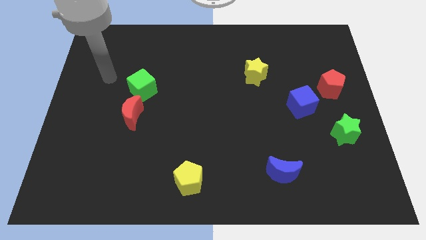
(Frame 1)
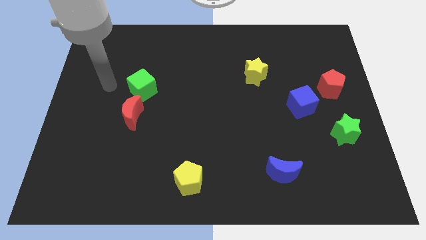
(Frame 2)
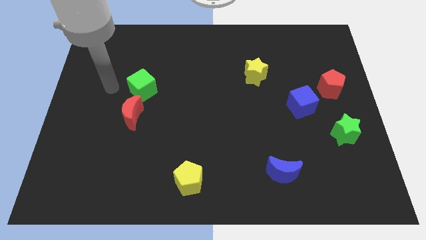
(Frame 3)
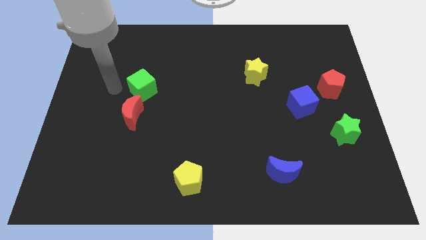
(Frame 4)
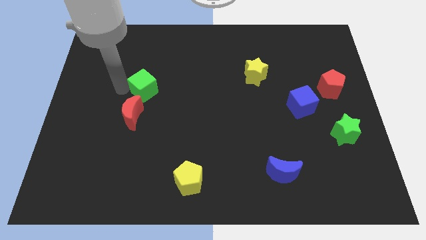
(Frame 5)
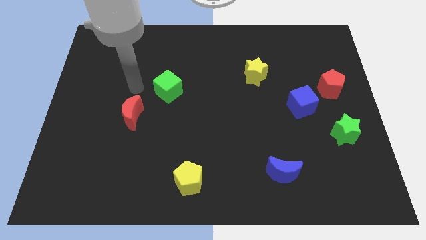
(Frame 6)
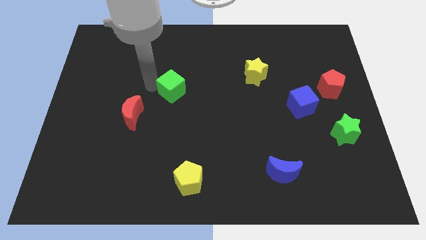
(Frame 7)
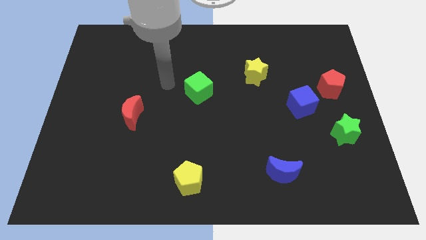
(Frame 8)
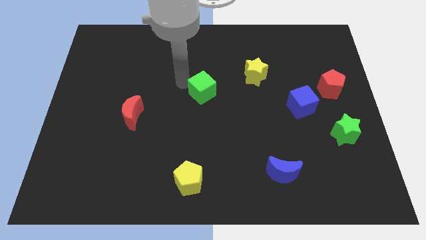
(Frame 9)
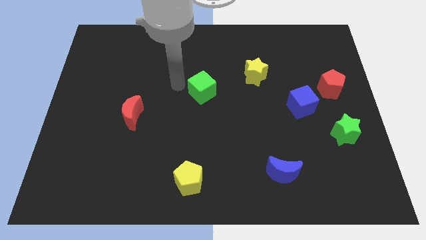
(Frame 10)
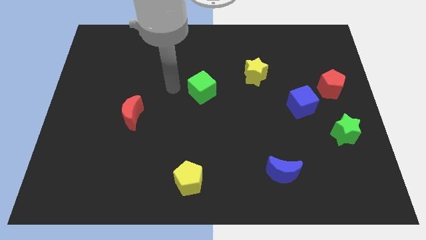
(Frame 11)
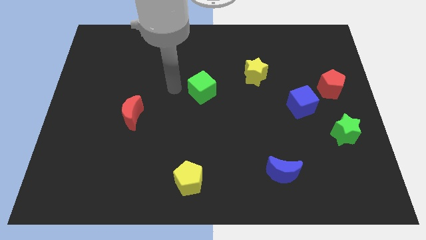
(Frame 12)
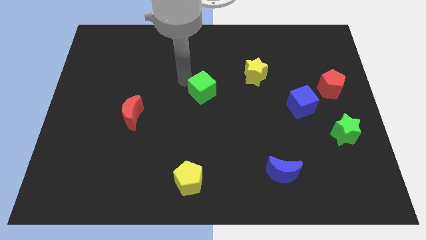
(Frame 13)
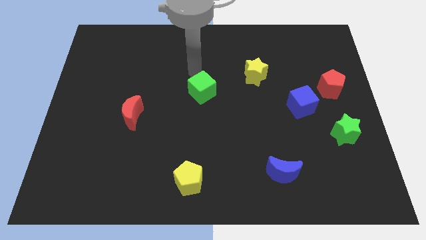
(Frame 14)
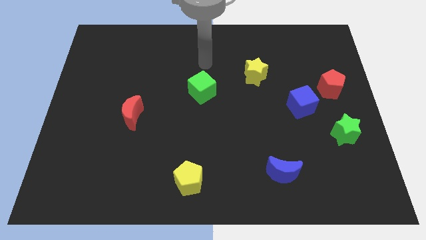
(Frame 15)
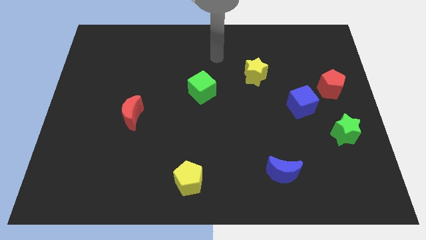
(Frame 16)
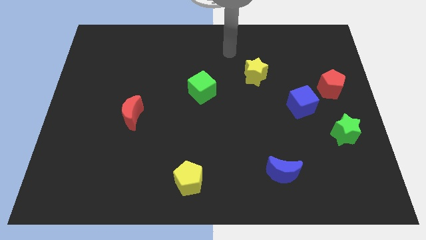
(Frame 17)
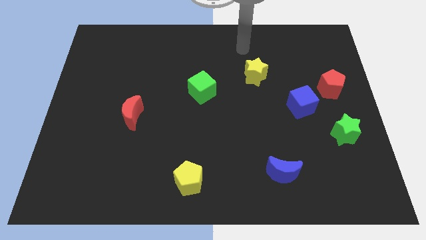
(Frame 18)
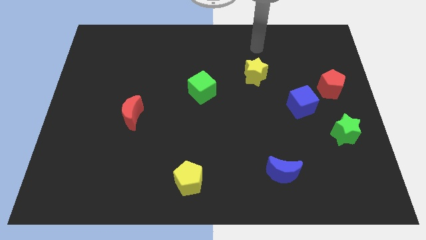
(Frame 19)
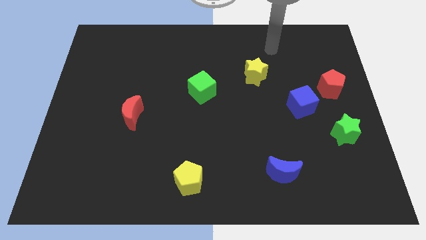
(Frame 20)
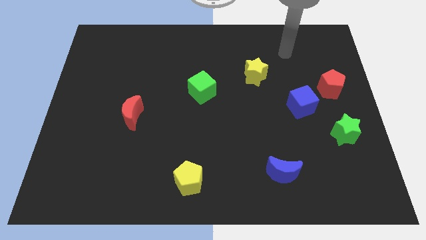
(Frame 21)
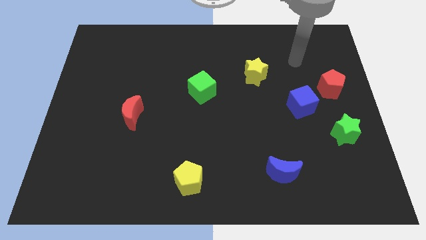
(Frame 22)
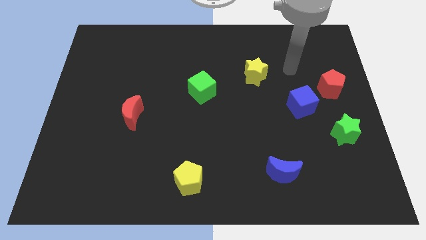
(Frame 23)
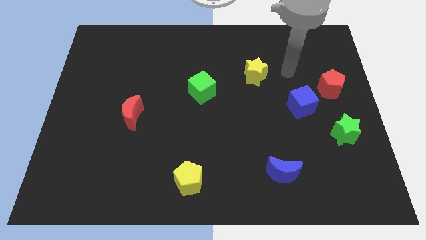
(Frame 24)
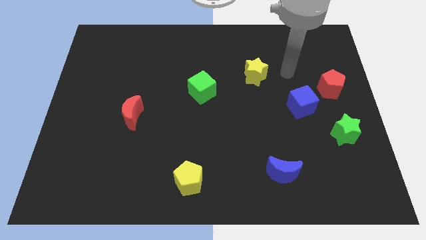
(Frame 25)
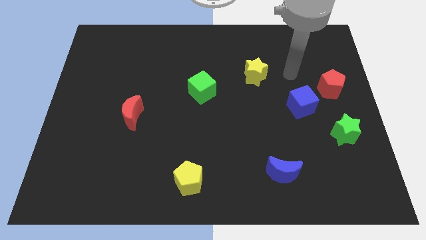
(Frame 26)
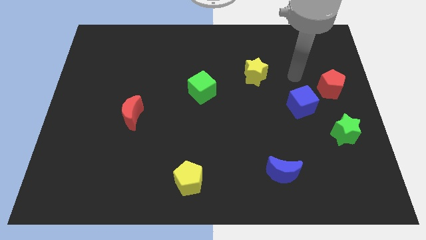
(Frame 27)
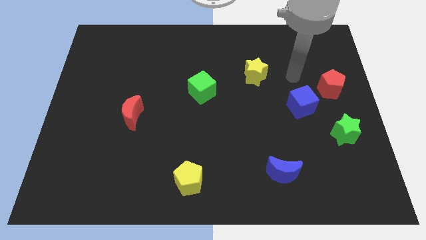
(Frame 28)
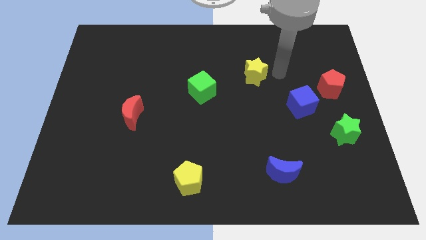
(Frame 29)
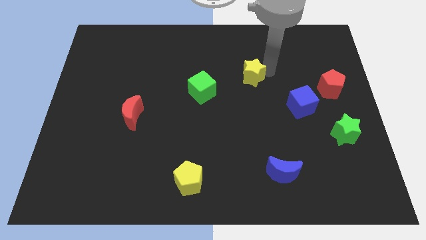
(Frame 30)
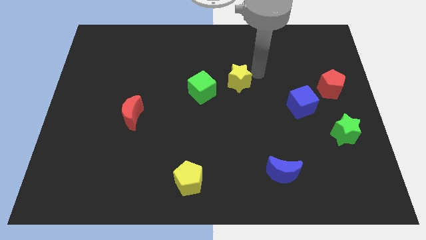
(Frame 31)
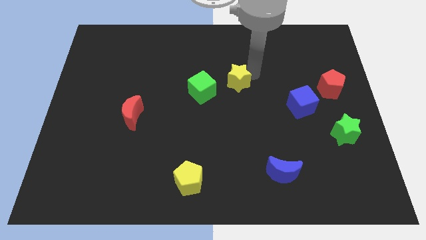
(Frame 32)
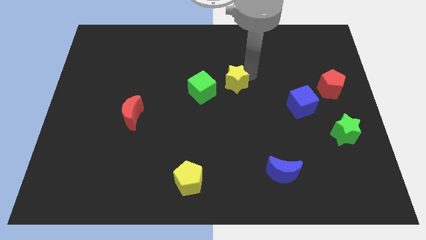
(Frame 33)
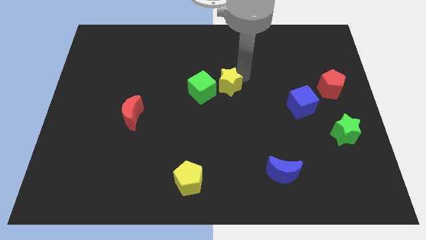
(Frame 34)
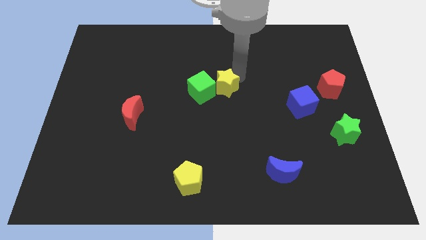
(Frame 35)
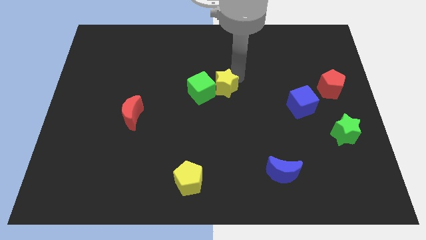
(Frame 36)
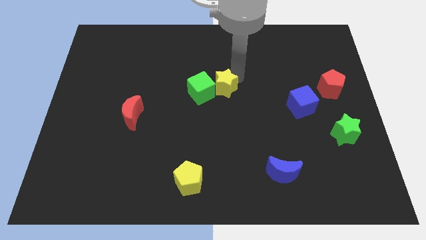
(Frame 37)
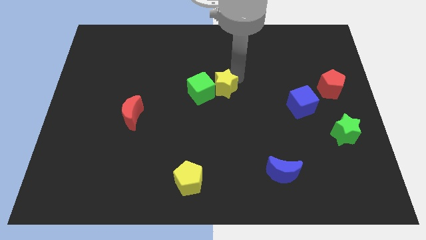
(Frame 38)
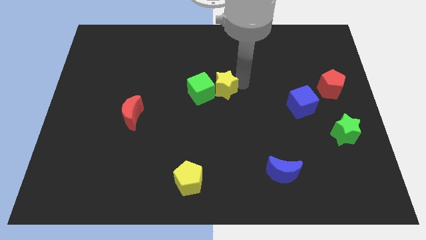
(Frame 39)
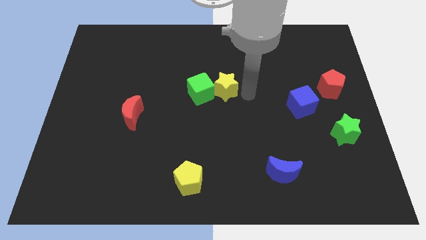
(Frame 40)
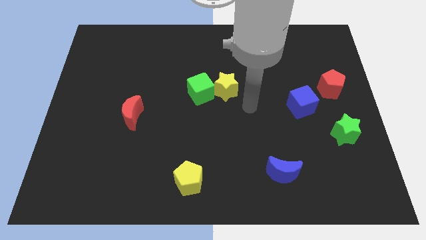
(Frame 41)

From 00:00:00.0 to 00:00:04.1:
push the yellow star into the green cube

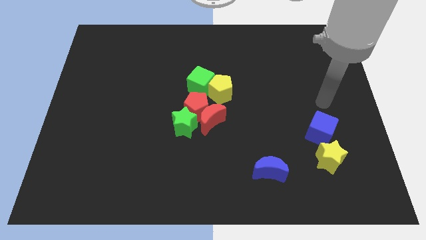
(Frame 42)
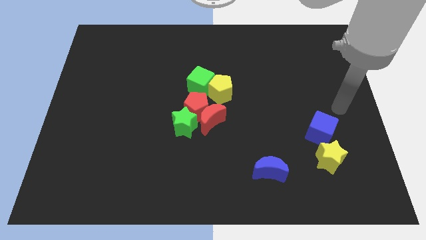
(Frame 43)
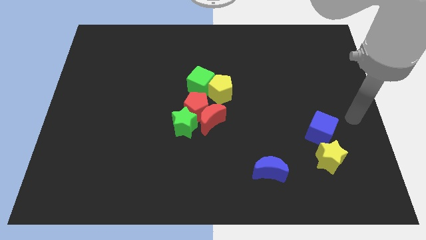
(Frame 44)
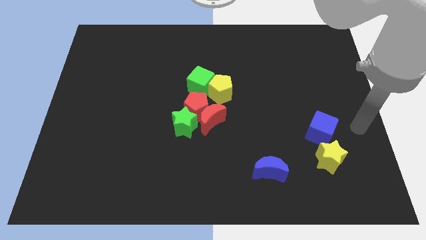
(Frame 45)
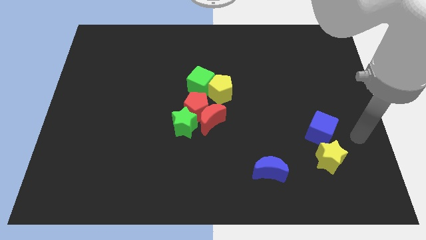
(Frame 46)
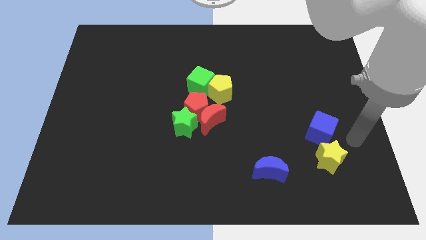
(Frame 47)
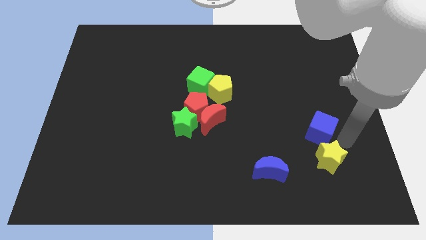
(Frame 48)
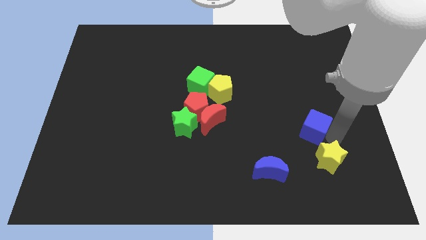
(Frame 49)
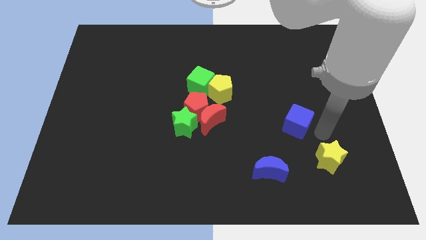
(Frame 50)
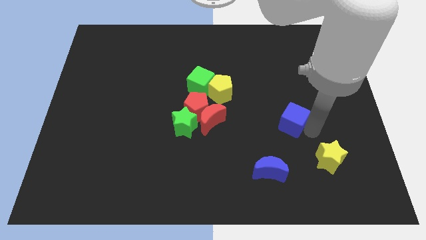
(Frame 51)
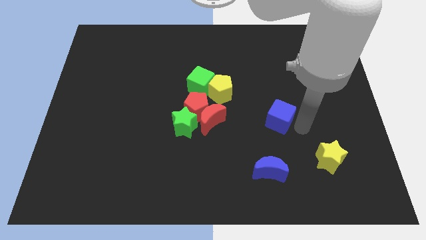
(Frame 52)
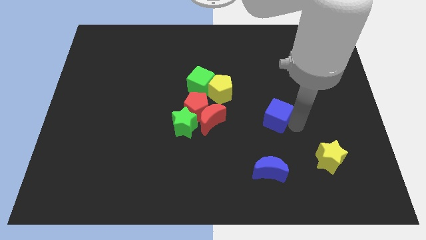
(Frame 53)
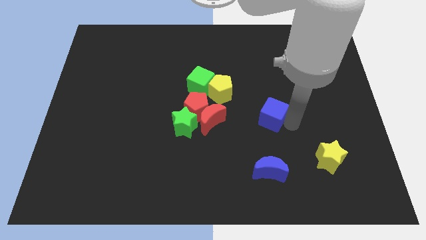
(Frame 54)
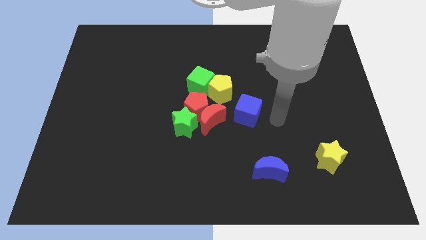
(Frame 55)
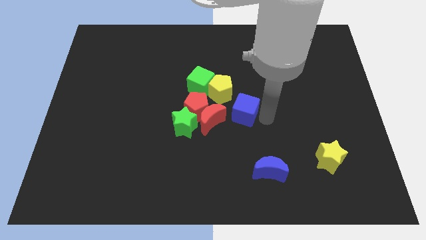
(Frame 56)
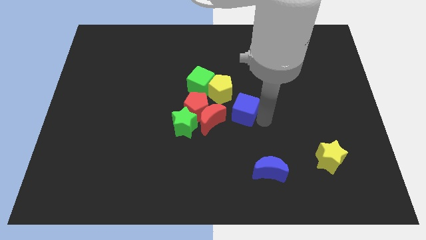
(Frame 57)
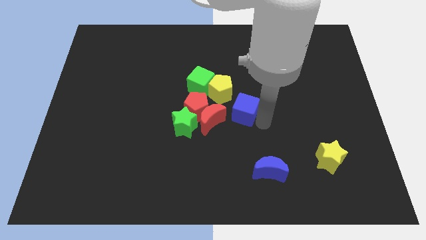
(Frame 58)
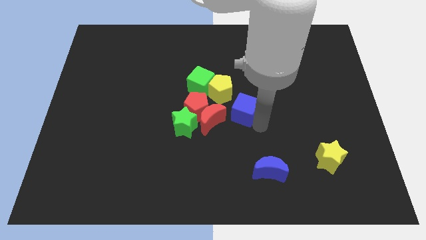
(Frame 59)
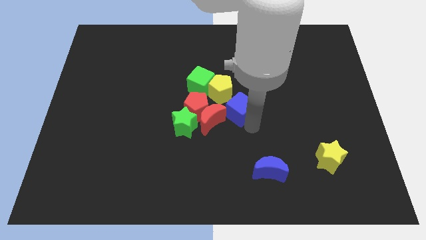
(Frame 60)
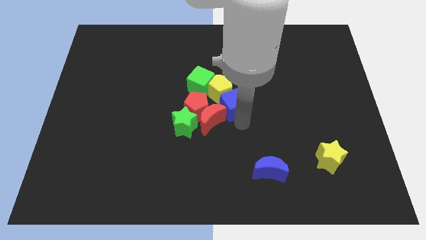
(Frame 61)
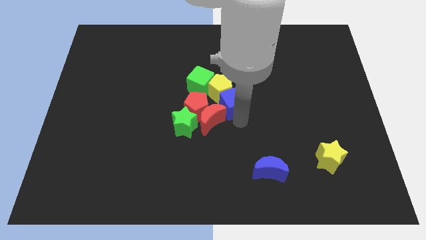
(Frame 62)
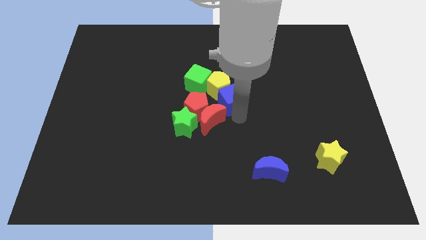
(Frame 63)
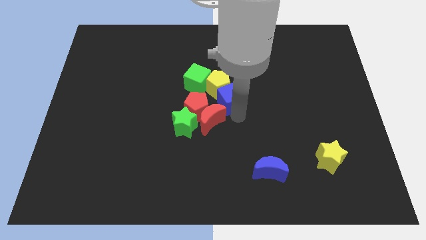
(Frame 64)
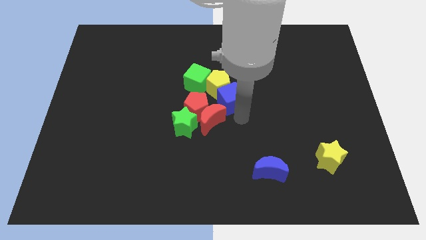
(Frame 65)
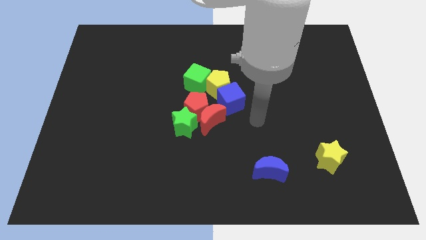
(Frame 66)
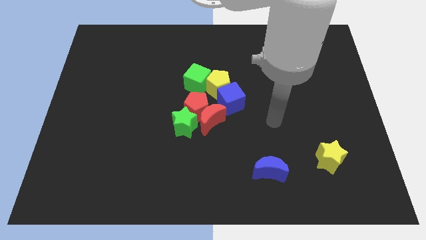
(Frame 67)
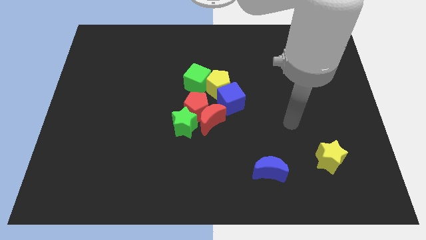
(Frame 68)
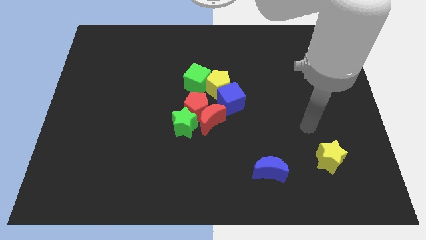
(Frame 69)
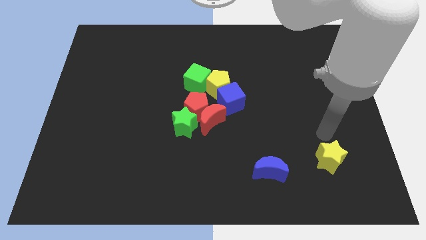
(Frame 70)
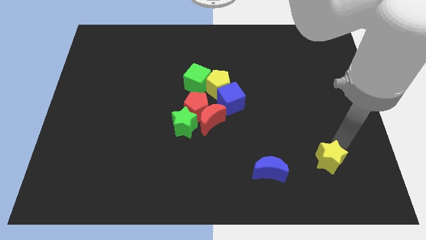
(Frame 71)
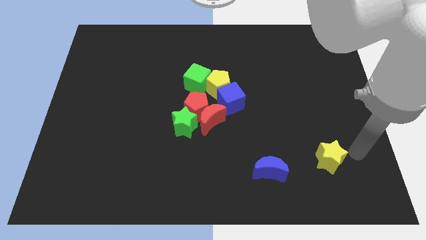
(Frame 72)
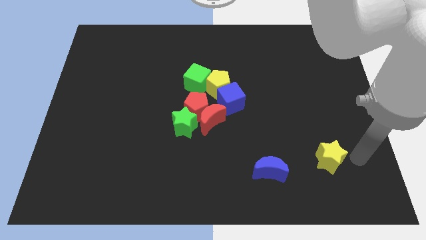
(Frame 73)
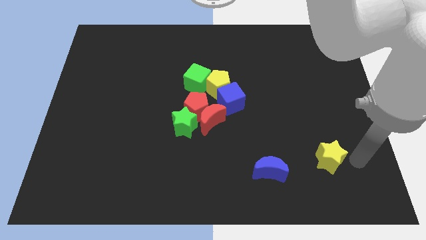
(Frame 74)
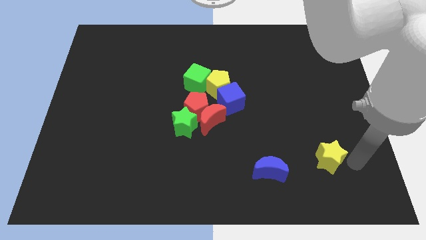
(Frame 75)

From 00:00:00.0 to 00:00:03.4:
push the blue cube close to the yellow pentagon

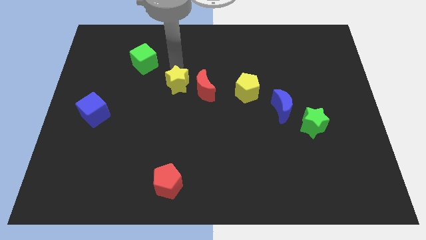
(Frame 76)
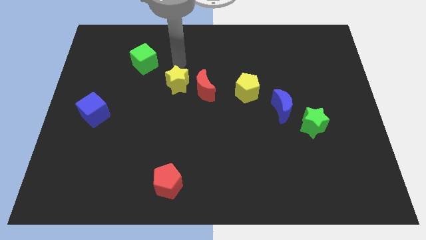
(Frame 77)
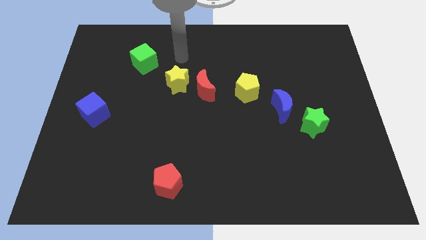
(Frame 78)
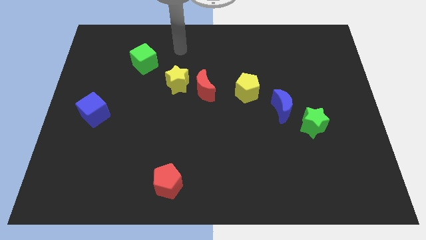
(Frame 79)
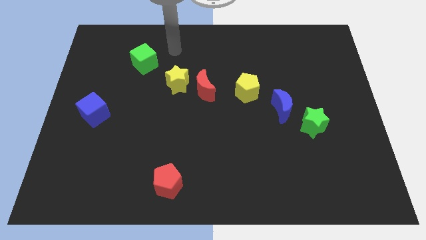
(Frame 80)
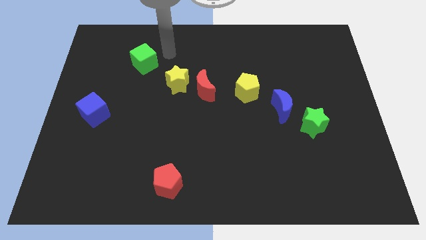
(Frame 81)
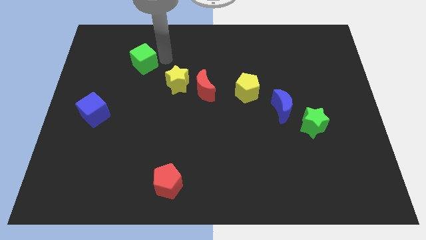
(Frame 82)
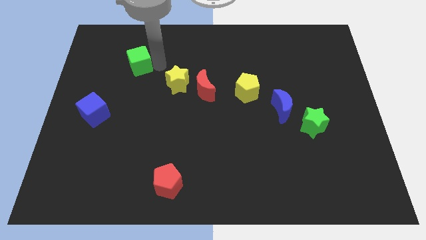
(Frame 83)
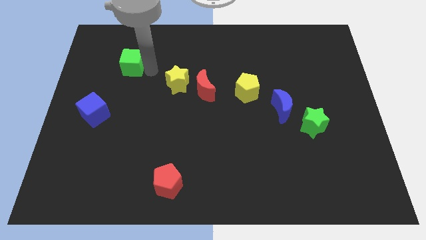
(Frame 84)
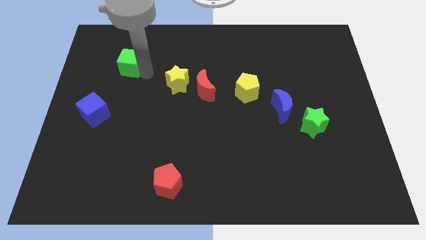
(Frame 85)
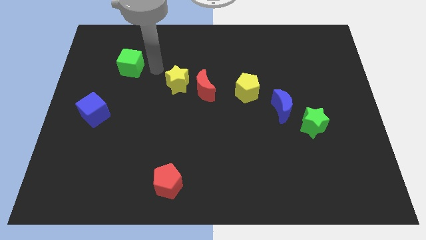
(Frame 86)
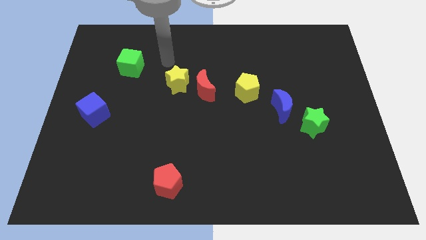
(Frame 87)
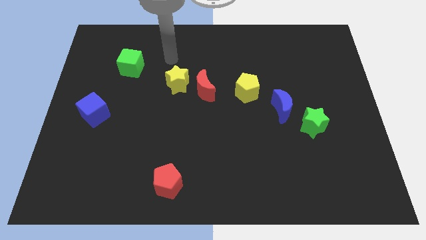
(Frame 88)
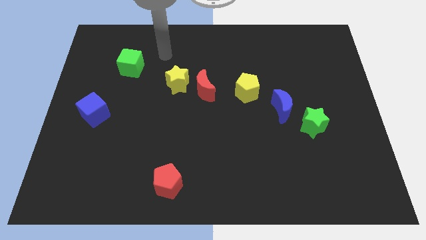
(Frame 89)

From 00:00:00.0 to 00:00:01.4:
slightly move the green cube towards the left

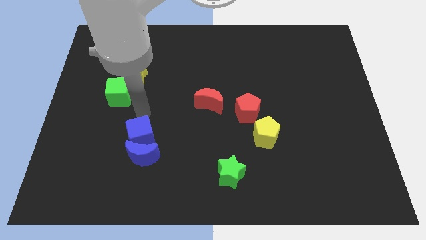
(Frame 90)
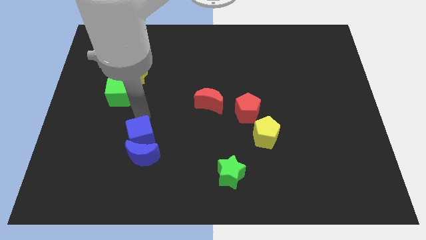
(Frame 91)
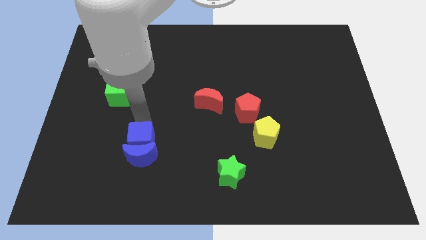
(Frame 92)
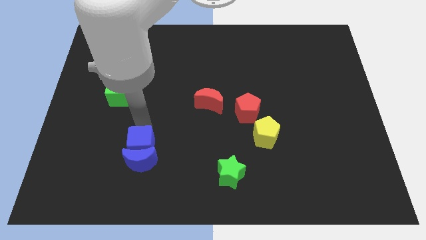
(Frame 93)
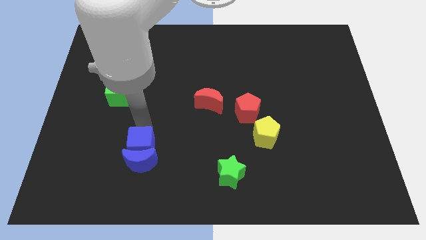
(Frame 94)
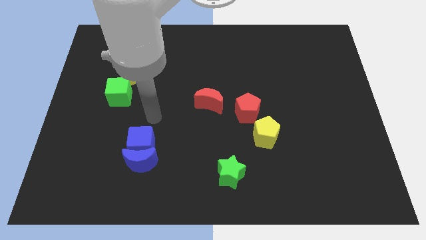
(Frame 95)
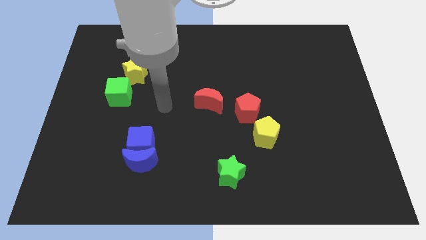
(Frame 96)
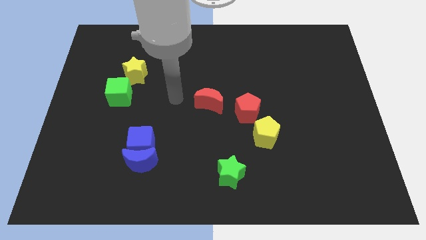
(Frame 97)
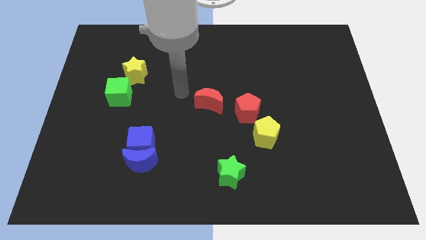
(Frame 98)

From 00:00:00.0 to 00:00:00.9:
push blue blocks to the bottom of the board
